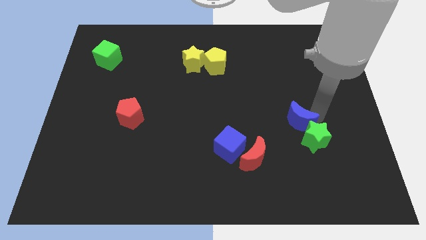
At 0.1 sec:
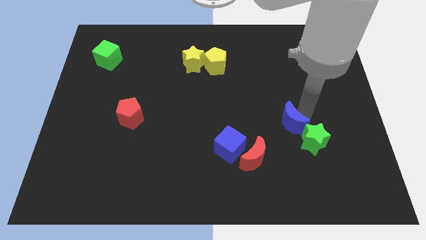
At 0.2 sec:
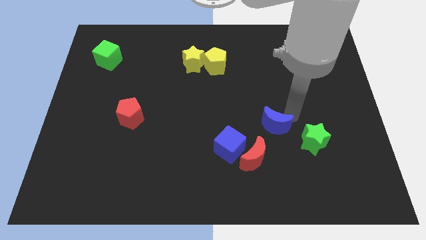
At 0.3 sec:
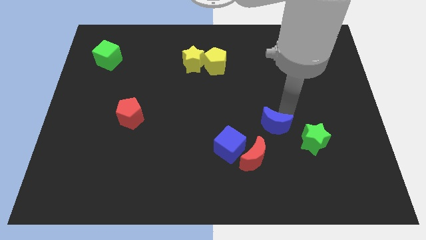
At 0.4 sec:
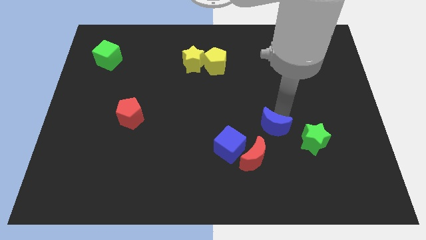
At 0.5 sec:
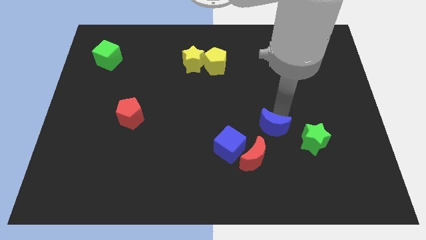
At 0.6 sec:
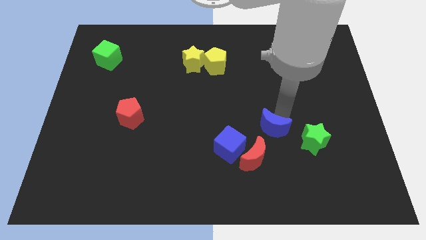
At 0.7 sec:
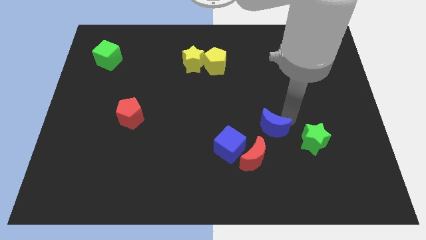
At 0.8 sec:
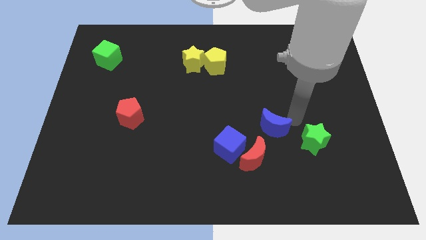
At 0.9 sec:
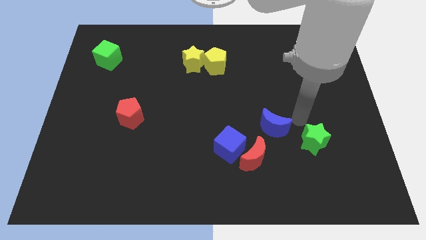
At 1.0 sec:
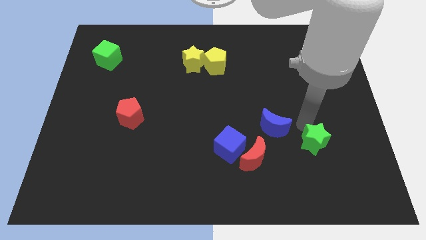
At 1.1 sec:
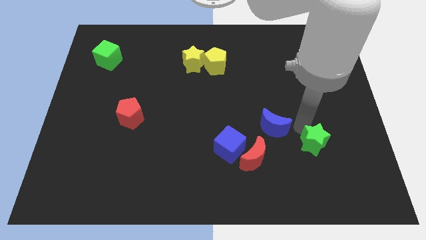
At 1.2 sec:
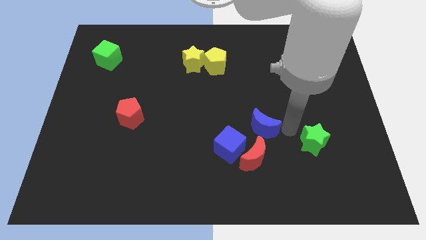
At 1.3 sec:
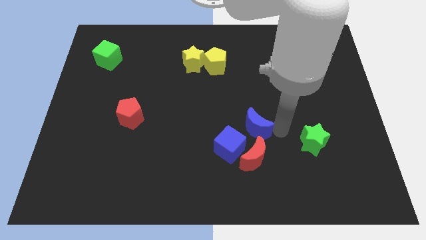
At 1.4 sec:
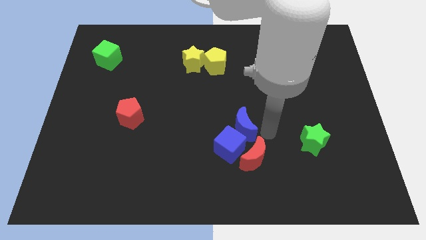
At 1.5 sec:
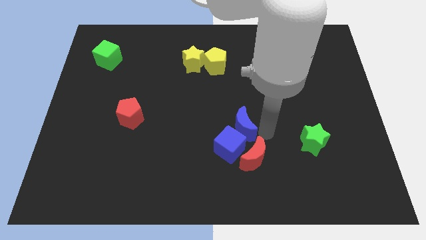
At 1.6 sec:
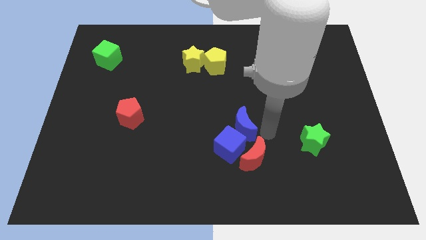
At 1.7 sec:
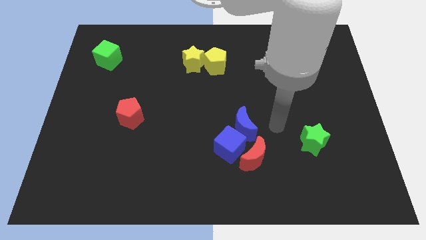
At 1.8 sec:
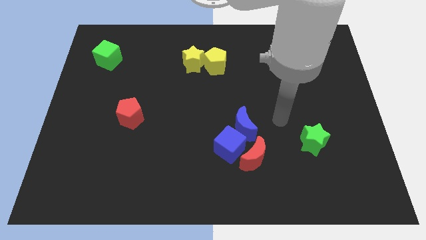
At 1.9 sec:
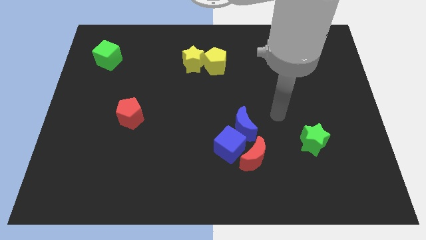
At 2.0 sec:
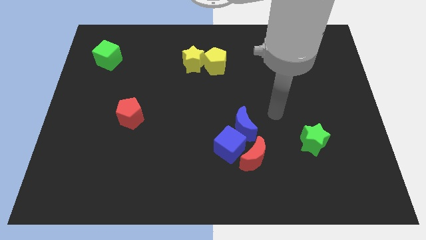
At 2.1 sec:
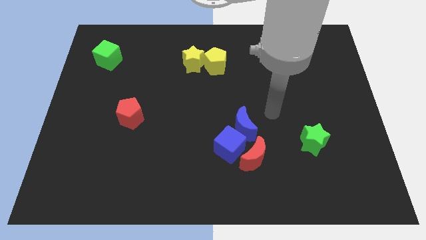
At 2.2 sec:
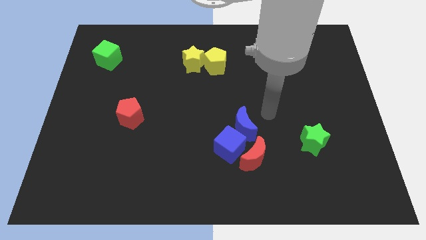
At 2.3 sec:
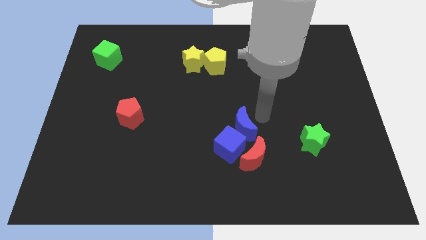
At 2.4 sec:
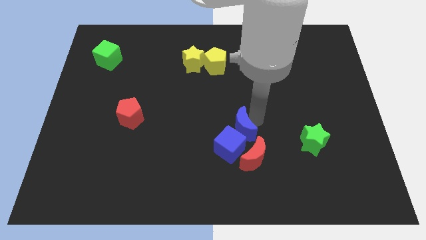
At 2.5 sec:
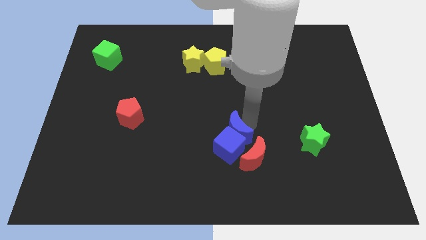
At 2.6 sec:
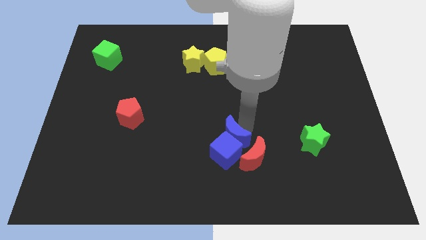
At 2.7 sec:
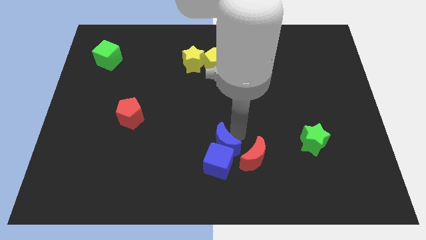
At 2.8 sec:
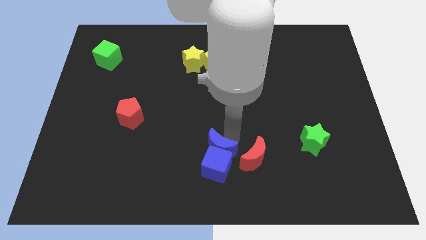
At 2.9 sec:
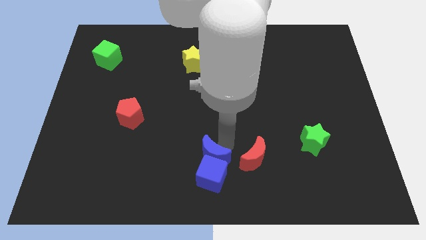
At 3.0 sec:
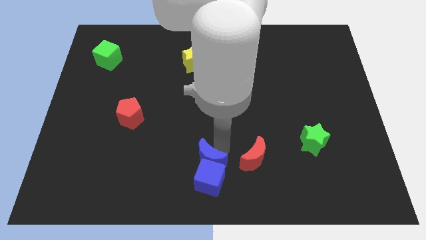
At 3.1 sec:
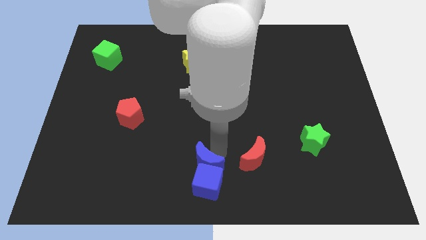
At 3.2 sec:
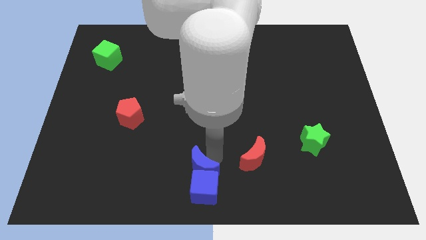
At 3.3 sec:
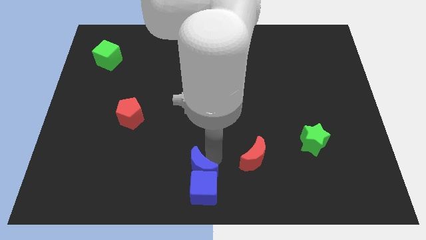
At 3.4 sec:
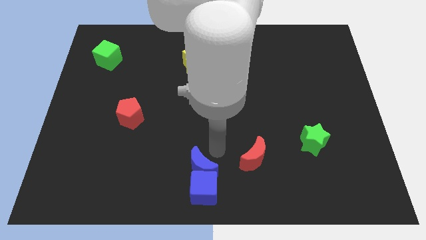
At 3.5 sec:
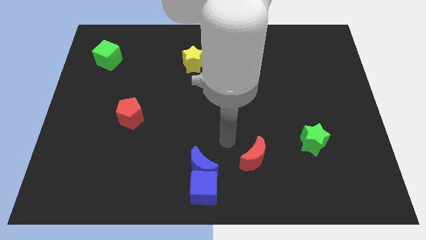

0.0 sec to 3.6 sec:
push the blue crescent into the blue cube towards the bottom center of the board

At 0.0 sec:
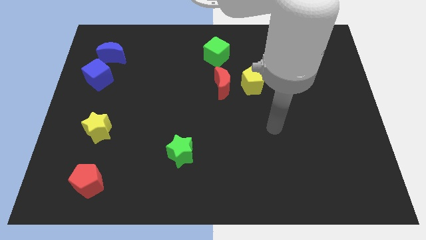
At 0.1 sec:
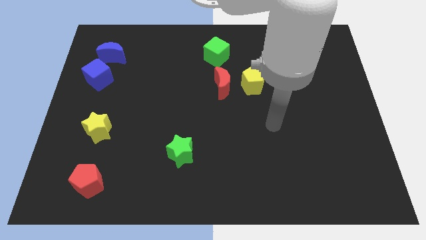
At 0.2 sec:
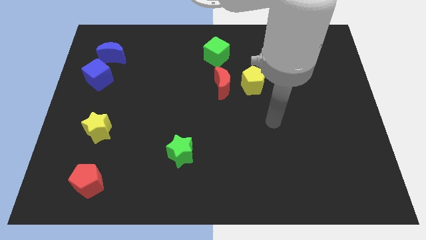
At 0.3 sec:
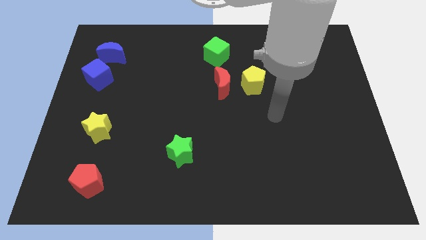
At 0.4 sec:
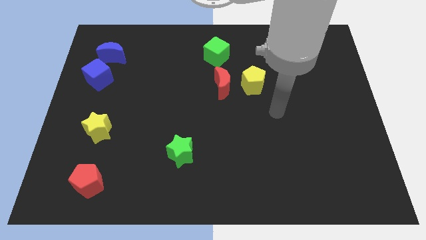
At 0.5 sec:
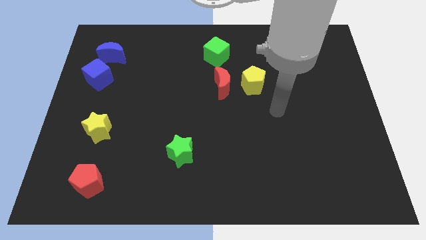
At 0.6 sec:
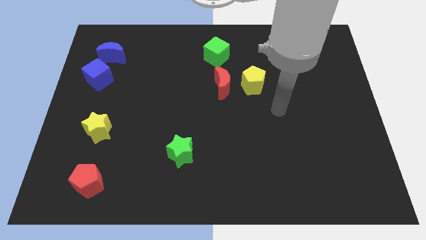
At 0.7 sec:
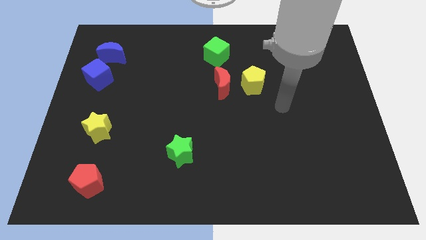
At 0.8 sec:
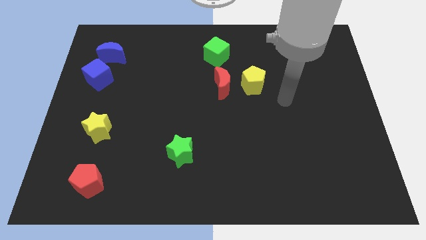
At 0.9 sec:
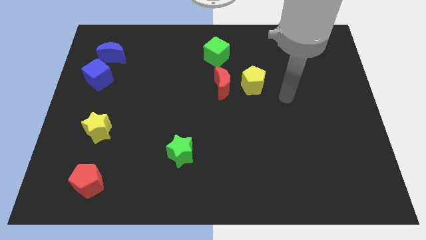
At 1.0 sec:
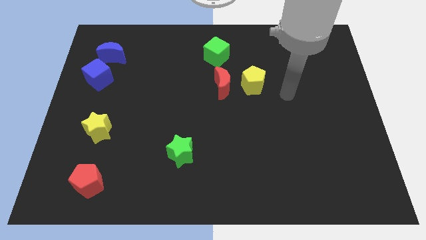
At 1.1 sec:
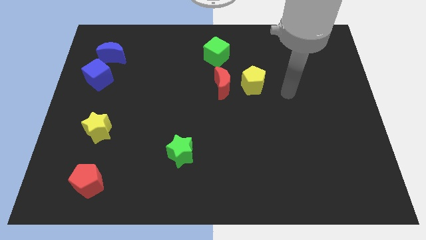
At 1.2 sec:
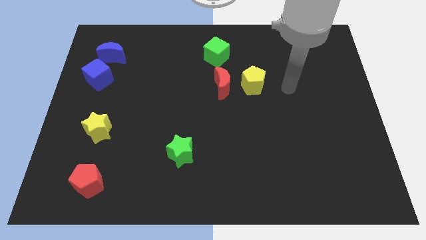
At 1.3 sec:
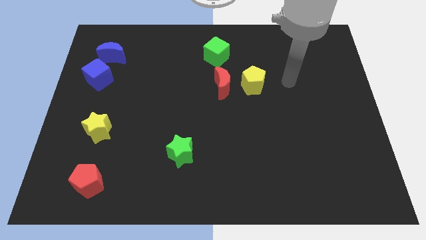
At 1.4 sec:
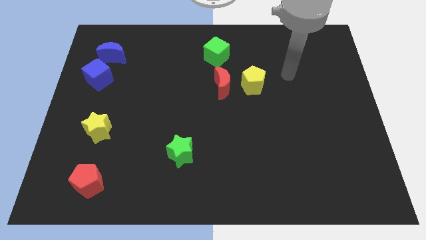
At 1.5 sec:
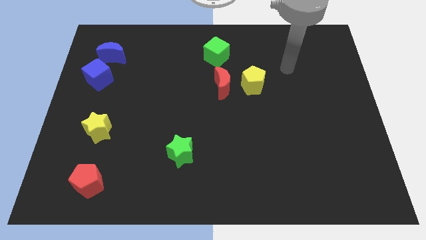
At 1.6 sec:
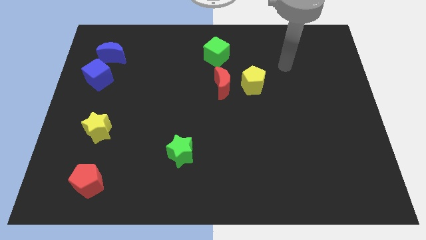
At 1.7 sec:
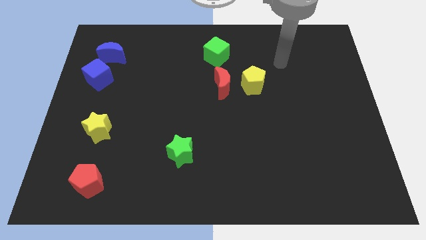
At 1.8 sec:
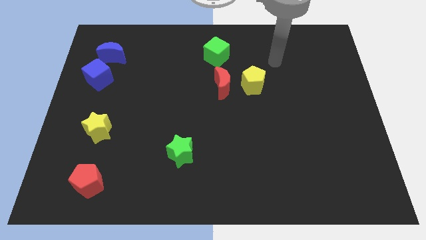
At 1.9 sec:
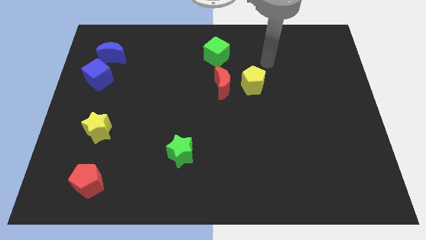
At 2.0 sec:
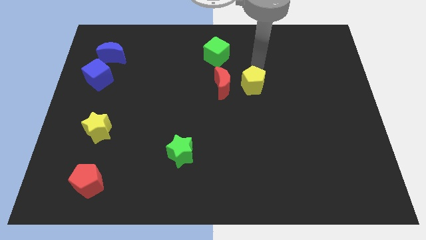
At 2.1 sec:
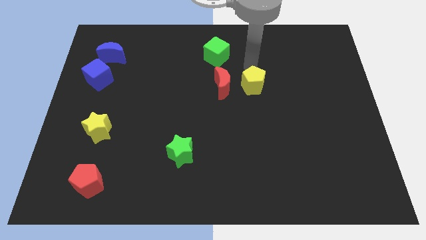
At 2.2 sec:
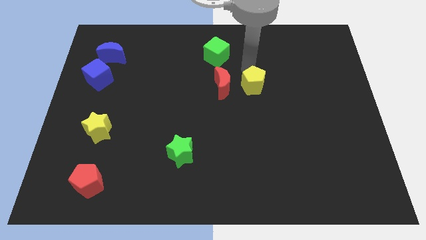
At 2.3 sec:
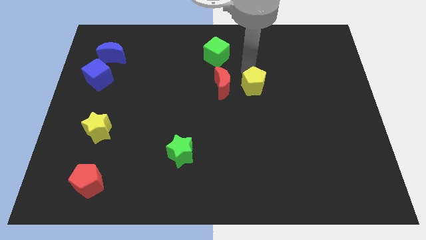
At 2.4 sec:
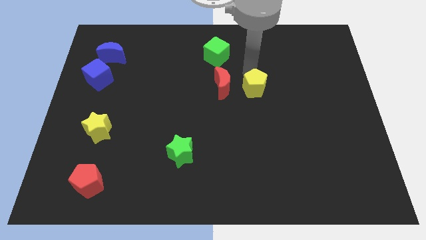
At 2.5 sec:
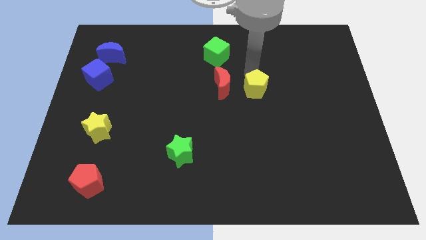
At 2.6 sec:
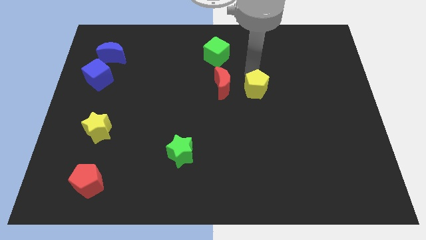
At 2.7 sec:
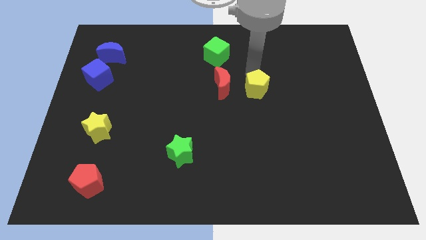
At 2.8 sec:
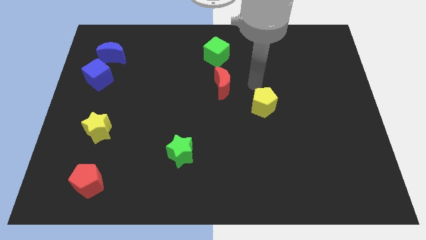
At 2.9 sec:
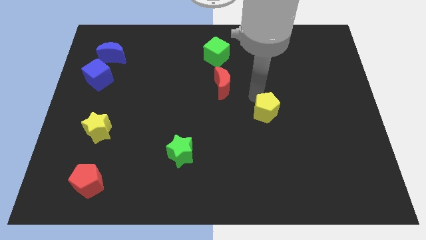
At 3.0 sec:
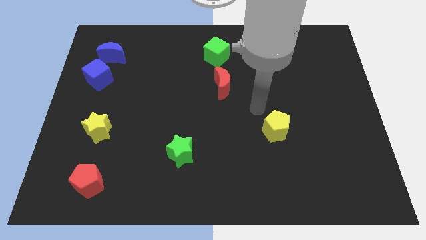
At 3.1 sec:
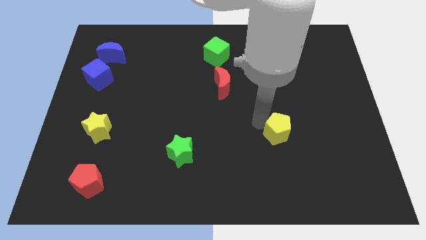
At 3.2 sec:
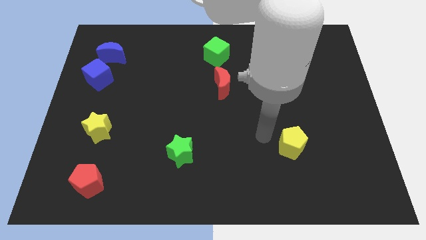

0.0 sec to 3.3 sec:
move your arm close to the yellow pentagon

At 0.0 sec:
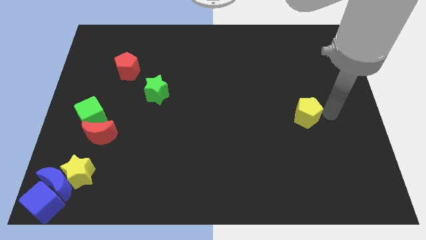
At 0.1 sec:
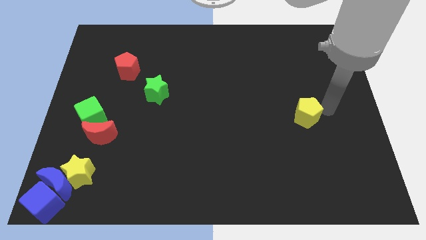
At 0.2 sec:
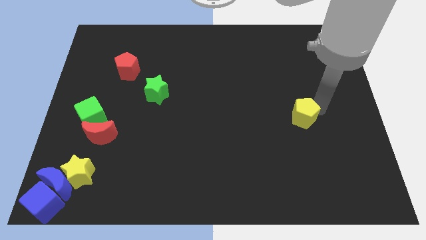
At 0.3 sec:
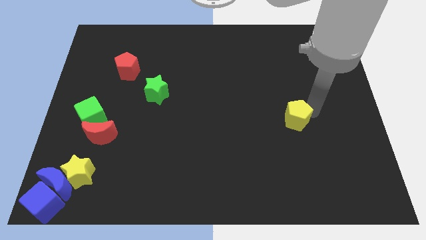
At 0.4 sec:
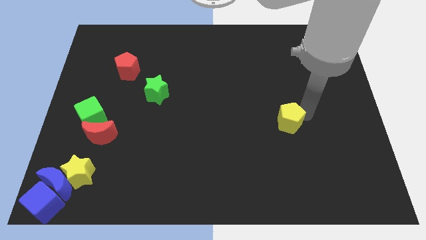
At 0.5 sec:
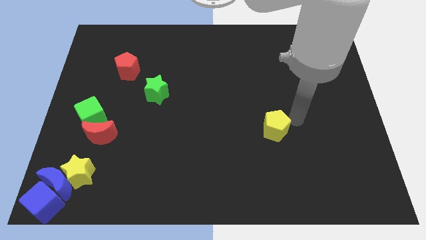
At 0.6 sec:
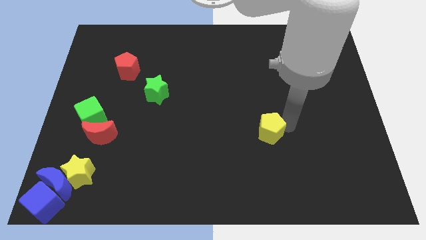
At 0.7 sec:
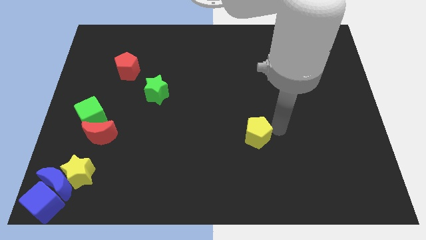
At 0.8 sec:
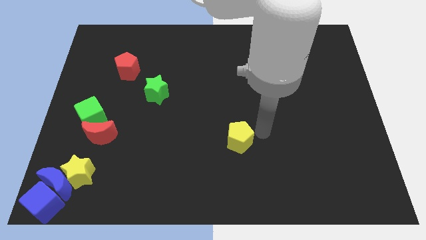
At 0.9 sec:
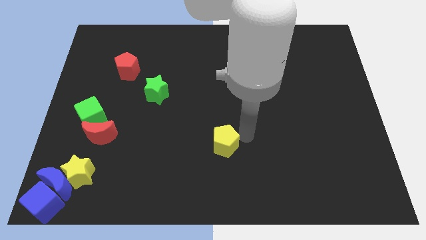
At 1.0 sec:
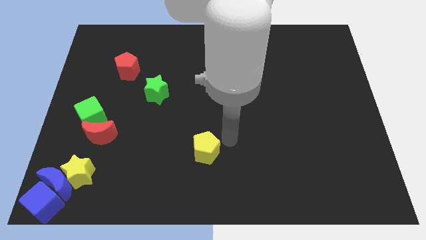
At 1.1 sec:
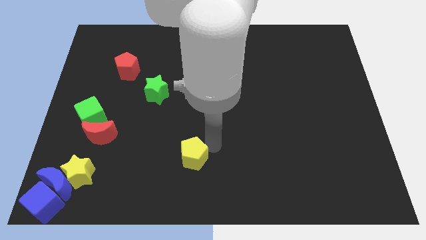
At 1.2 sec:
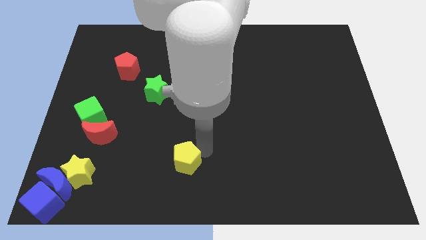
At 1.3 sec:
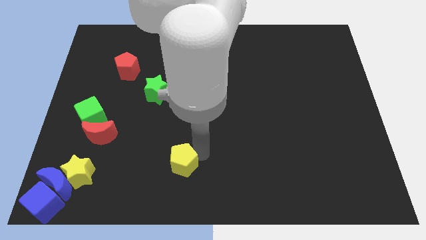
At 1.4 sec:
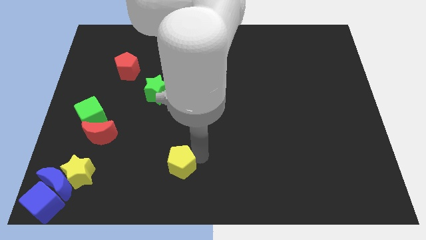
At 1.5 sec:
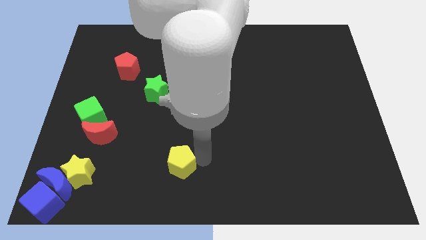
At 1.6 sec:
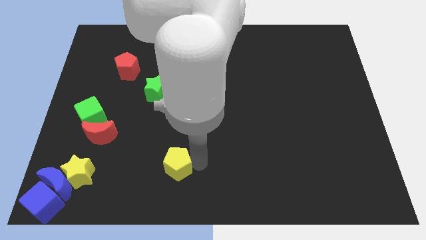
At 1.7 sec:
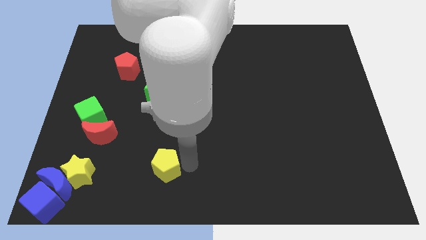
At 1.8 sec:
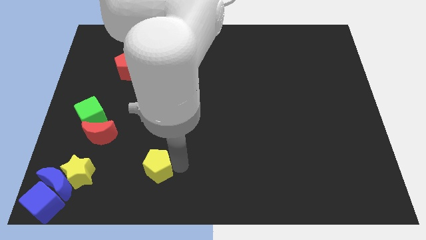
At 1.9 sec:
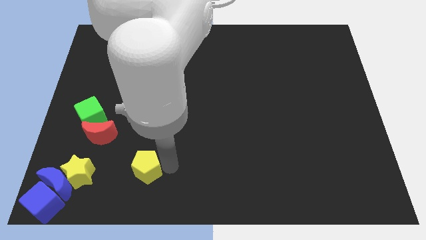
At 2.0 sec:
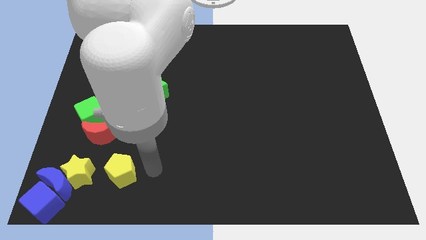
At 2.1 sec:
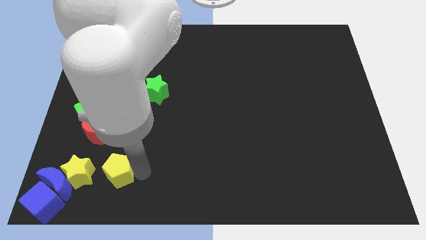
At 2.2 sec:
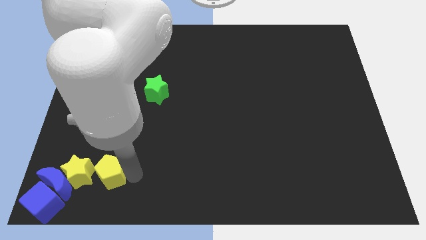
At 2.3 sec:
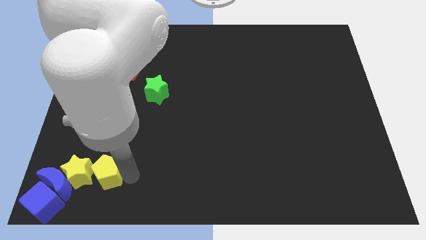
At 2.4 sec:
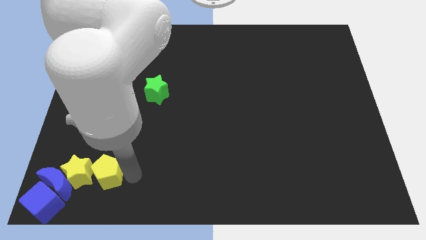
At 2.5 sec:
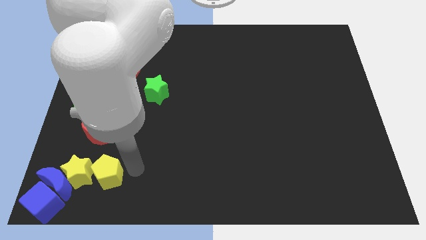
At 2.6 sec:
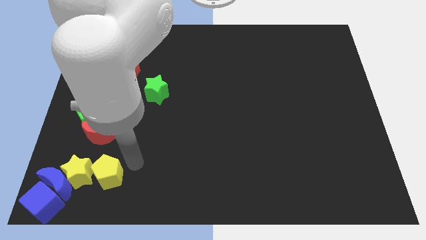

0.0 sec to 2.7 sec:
push the yellow pentagon right to the yellow star
